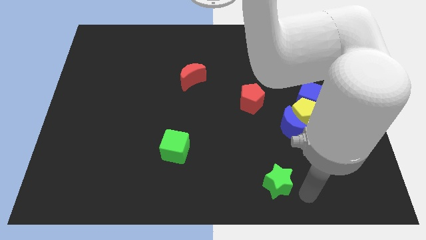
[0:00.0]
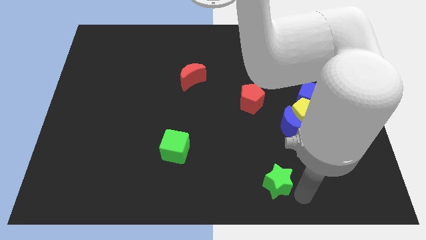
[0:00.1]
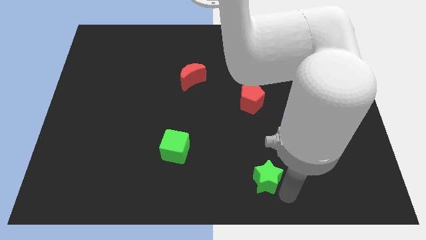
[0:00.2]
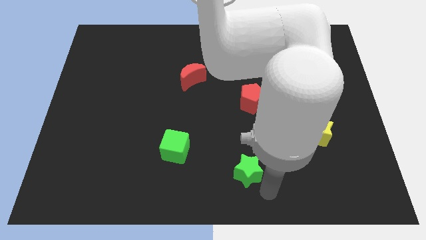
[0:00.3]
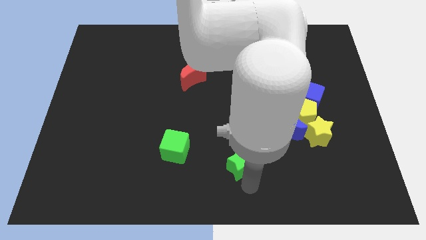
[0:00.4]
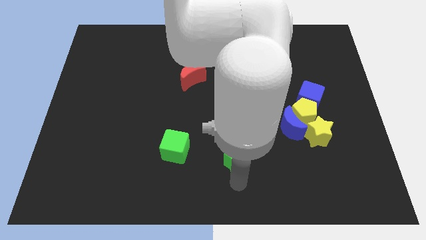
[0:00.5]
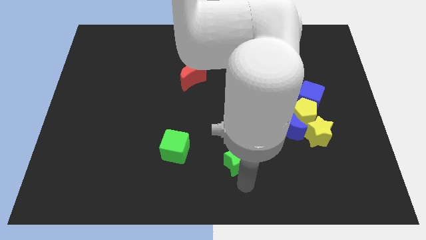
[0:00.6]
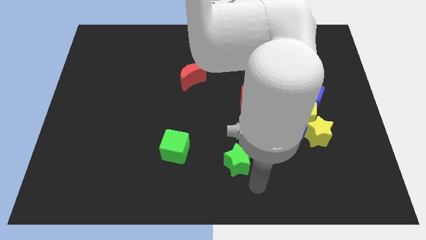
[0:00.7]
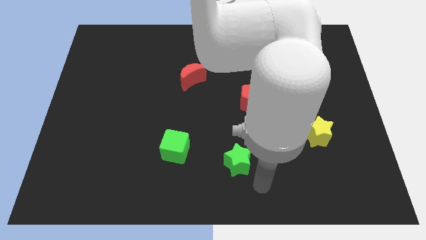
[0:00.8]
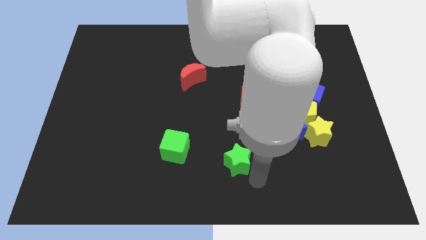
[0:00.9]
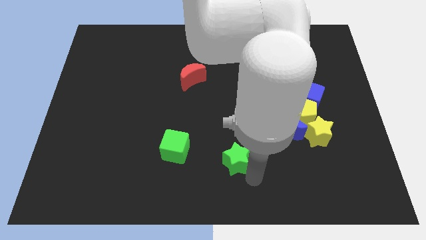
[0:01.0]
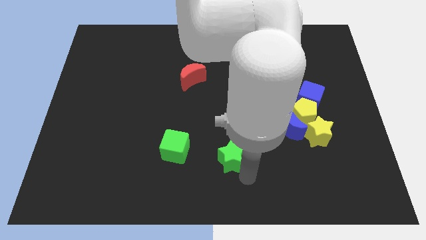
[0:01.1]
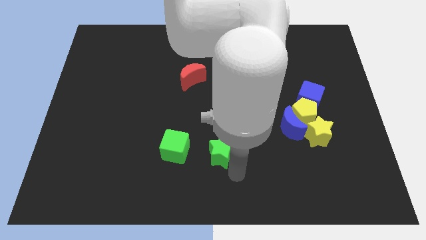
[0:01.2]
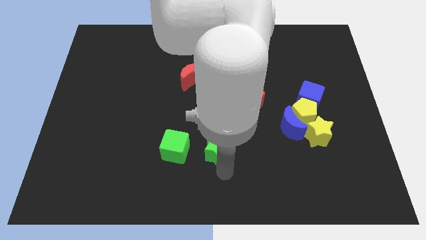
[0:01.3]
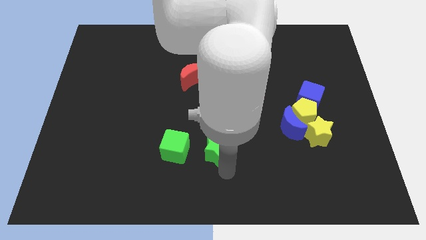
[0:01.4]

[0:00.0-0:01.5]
place green star to the right of the green cube

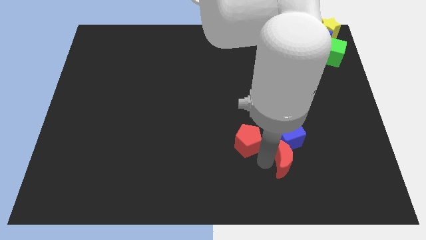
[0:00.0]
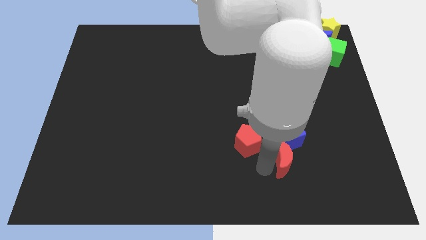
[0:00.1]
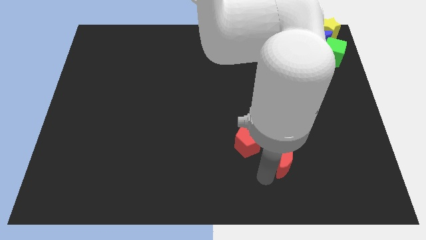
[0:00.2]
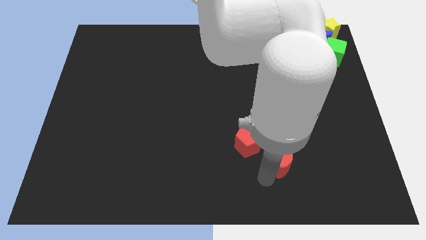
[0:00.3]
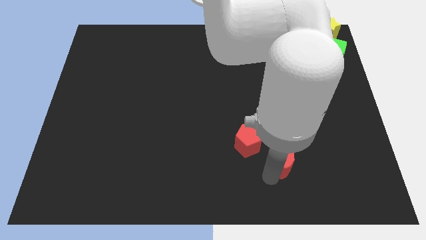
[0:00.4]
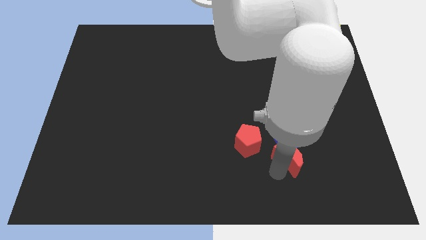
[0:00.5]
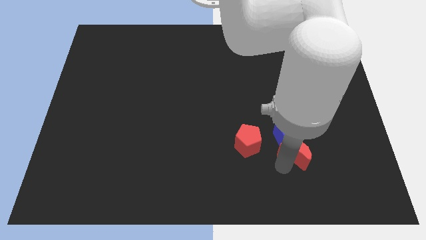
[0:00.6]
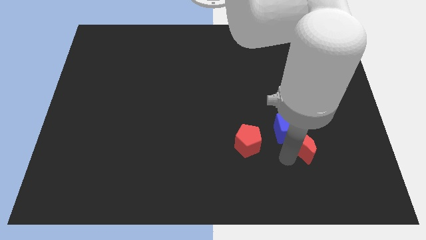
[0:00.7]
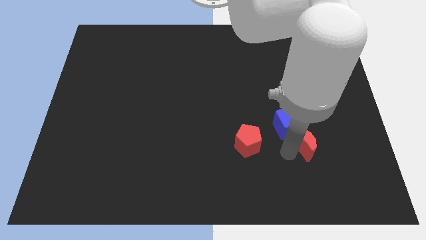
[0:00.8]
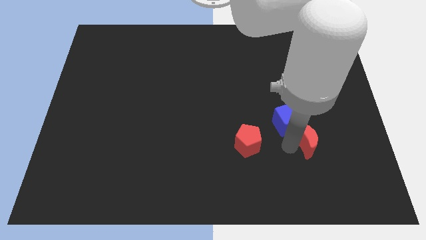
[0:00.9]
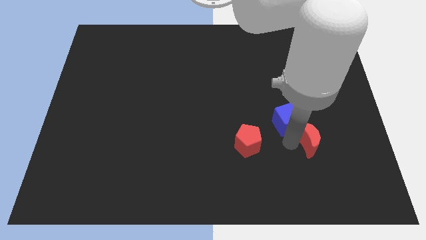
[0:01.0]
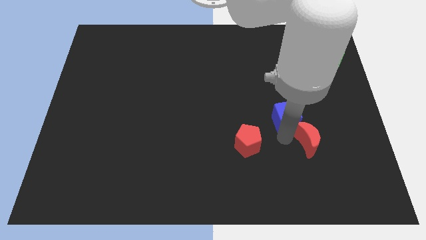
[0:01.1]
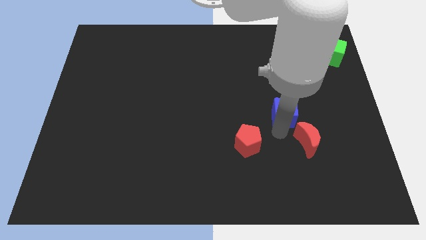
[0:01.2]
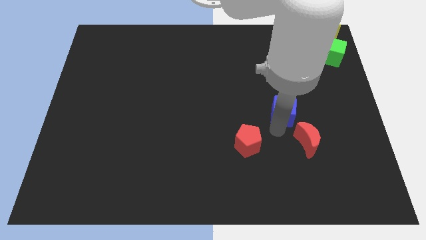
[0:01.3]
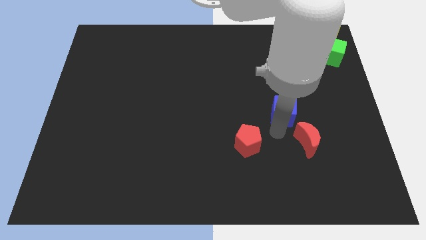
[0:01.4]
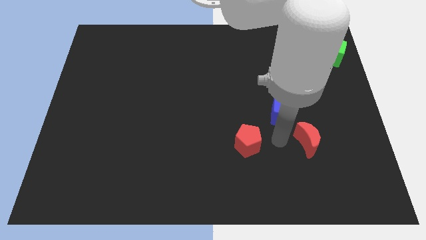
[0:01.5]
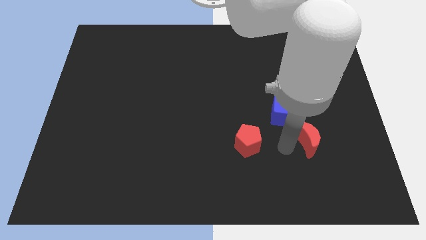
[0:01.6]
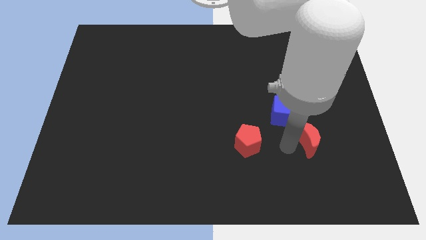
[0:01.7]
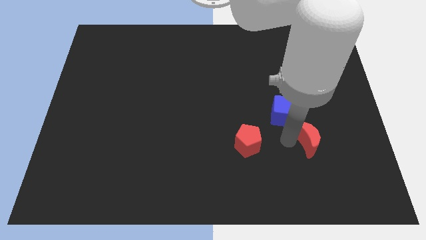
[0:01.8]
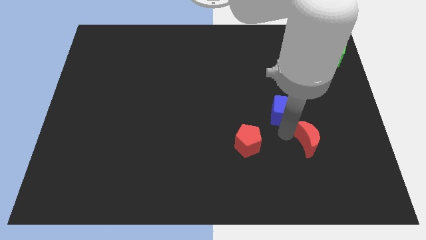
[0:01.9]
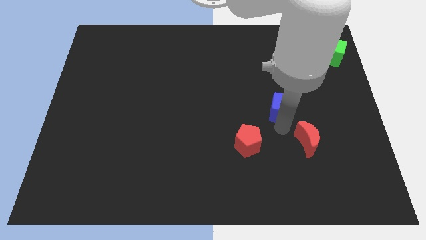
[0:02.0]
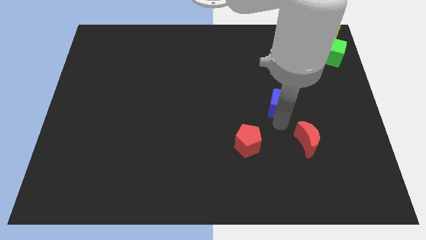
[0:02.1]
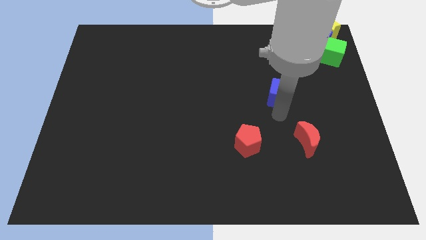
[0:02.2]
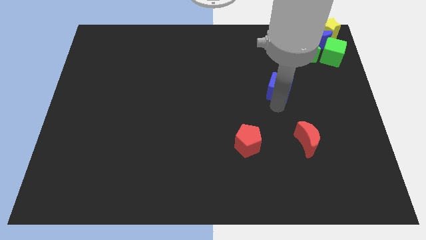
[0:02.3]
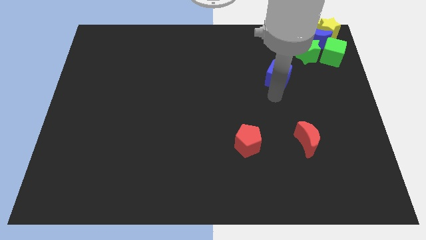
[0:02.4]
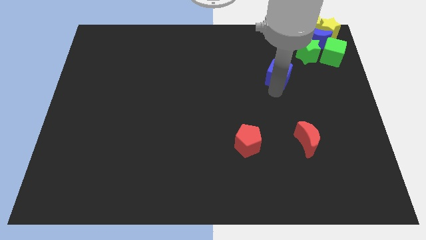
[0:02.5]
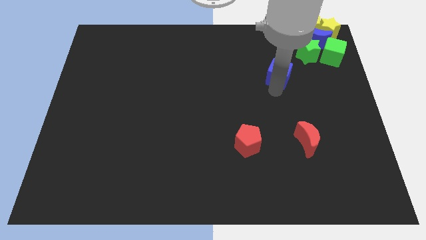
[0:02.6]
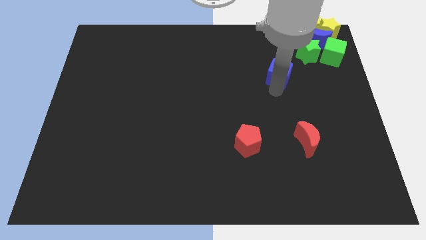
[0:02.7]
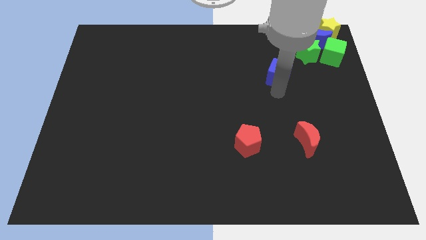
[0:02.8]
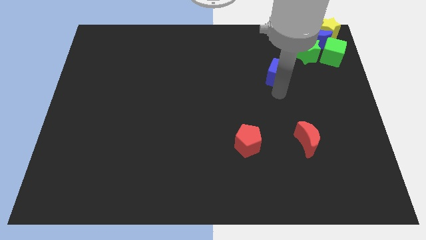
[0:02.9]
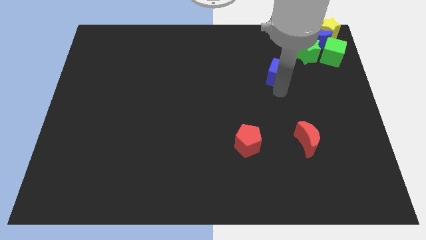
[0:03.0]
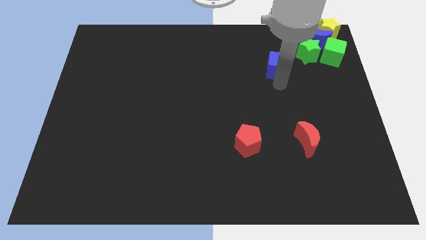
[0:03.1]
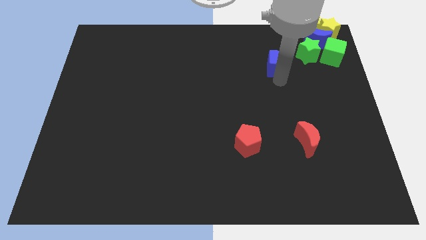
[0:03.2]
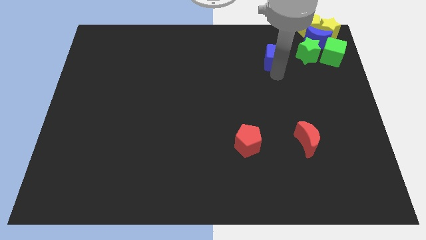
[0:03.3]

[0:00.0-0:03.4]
push blue cube up

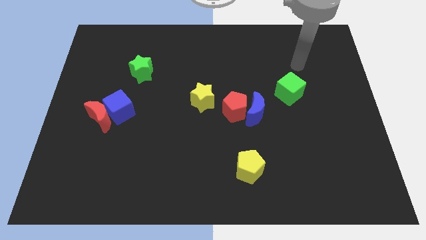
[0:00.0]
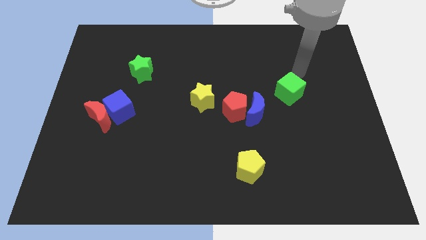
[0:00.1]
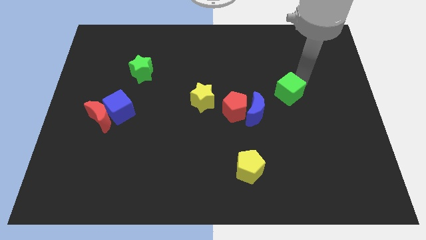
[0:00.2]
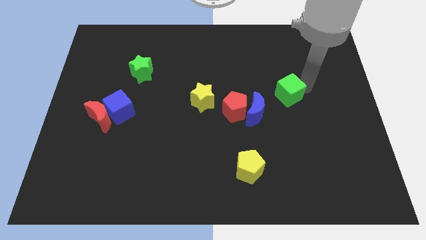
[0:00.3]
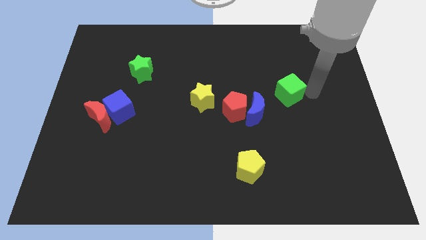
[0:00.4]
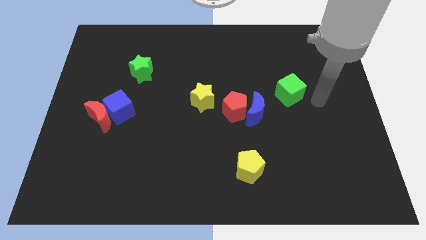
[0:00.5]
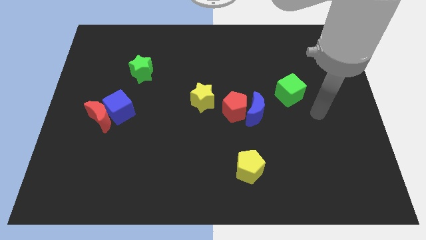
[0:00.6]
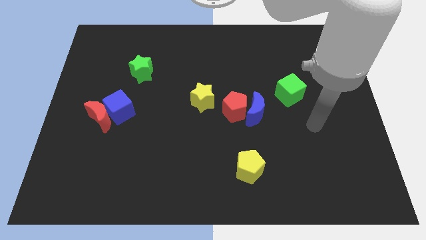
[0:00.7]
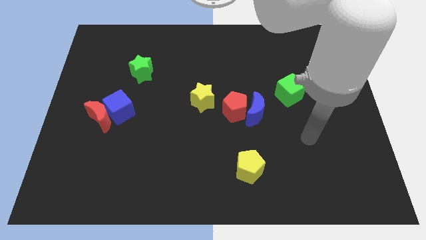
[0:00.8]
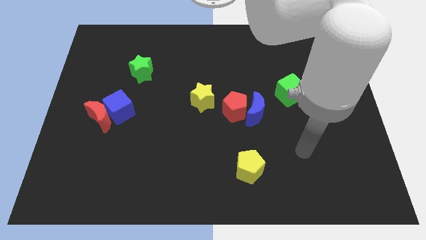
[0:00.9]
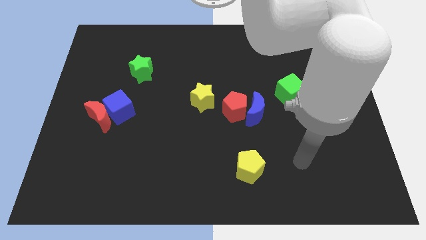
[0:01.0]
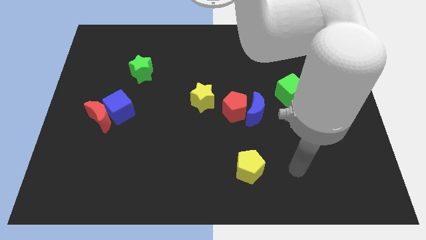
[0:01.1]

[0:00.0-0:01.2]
slightly touch the green cube

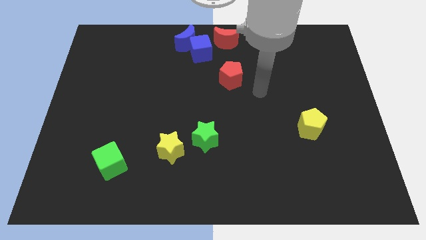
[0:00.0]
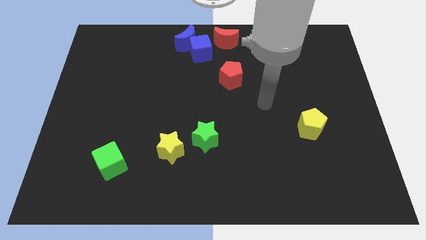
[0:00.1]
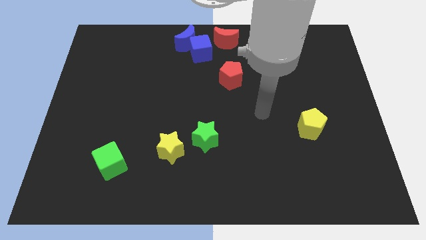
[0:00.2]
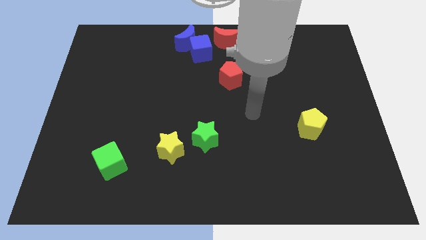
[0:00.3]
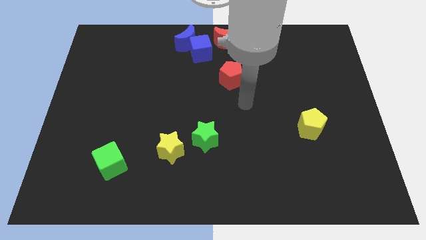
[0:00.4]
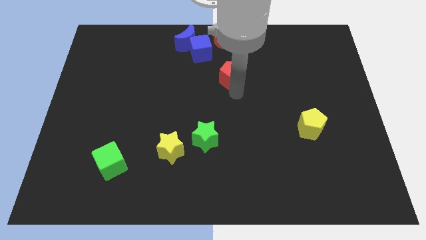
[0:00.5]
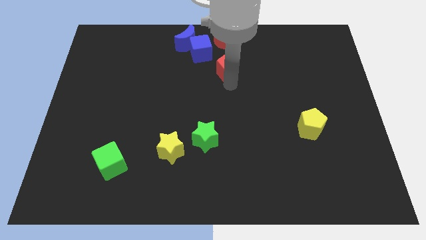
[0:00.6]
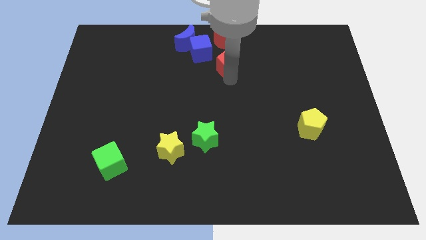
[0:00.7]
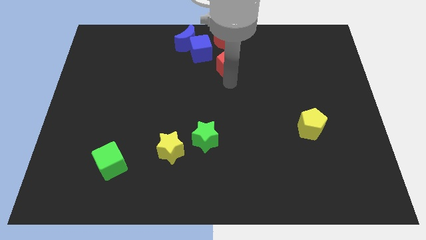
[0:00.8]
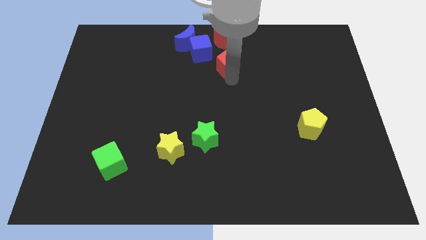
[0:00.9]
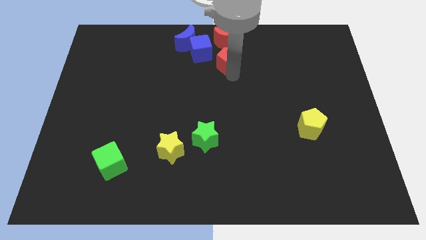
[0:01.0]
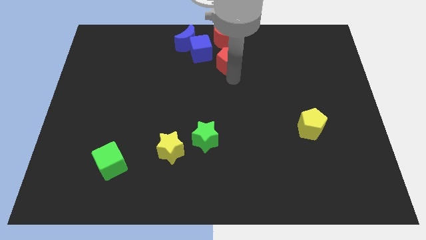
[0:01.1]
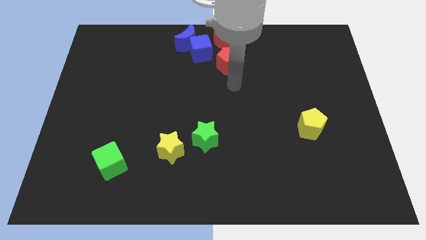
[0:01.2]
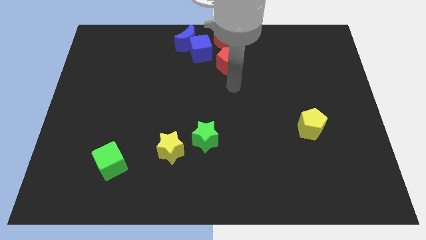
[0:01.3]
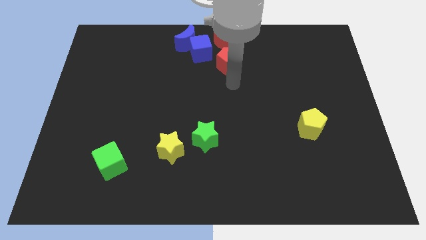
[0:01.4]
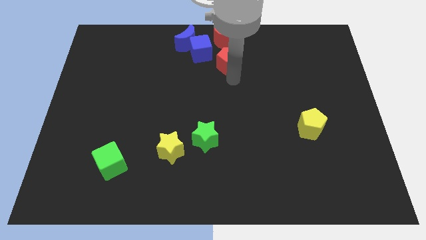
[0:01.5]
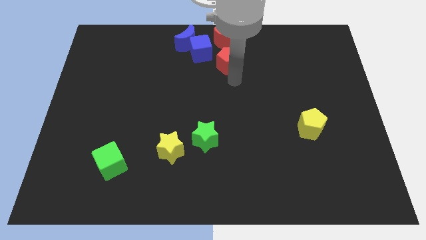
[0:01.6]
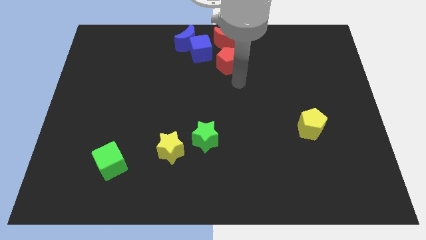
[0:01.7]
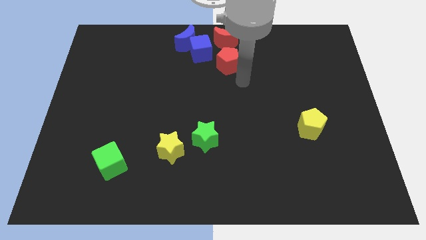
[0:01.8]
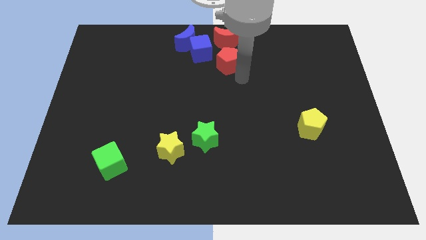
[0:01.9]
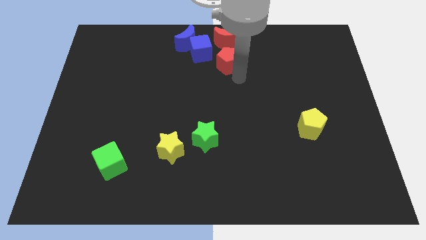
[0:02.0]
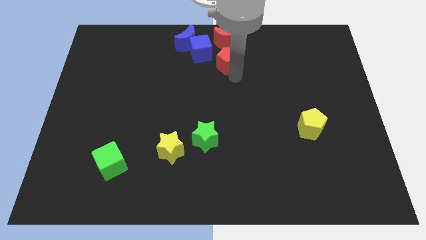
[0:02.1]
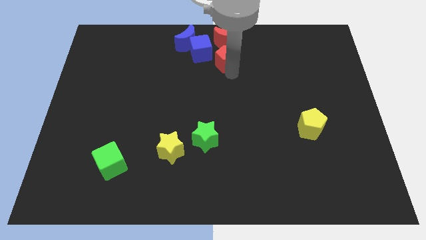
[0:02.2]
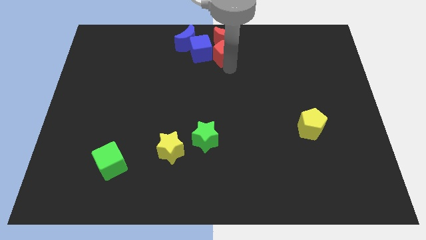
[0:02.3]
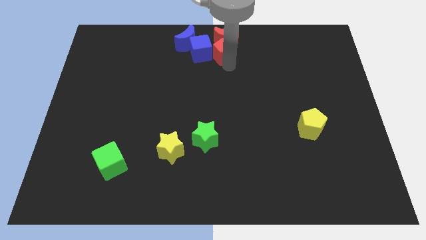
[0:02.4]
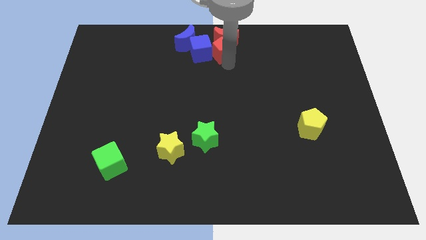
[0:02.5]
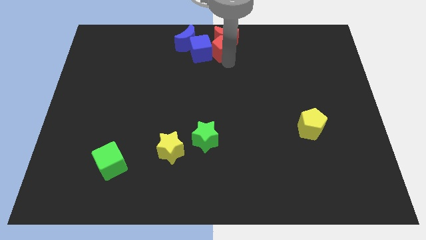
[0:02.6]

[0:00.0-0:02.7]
move the red pentagon to the right of the blue cube

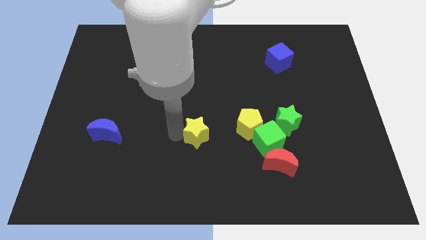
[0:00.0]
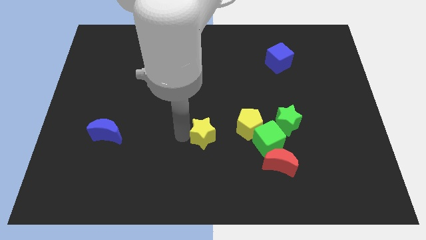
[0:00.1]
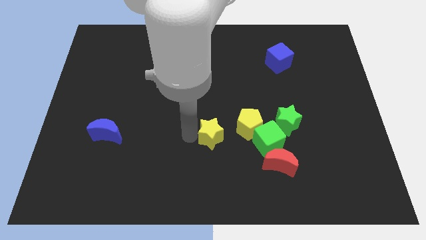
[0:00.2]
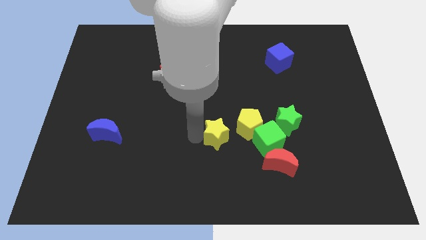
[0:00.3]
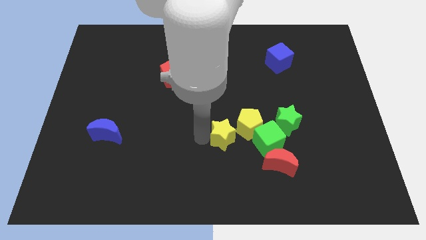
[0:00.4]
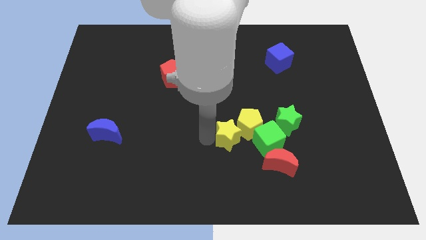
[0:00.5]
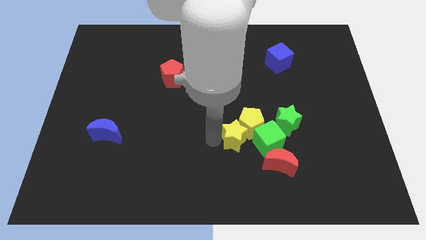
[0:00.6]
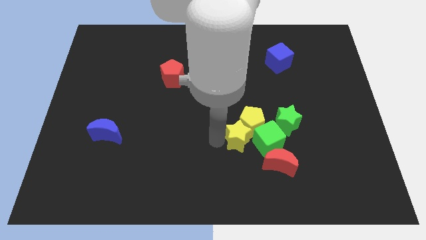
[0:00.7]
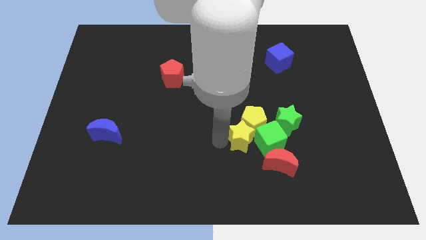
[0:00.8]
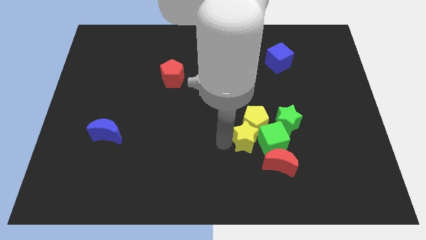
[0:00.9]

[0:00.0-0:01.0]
move the yellow star to the left of the green cube
